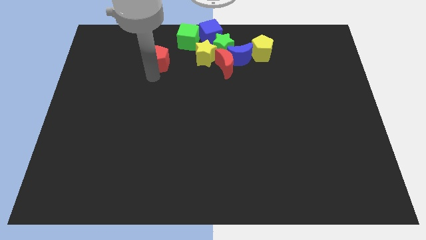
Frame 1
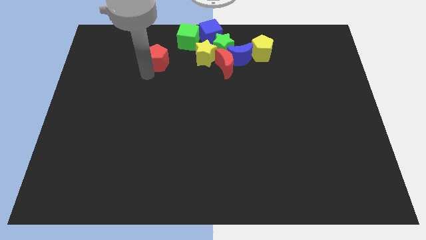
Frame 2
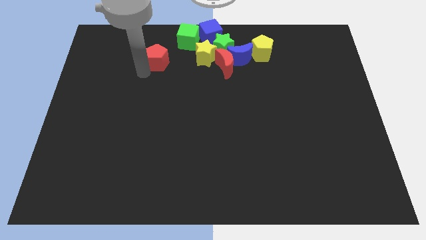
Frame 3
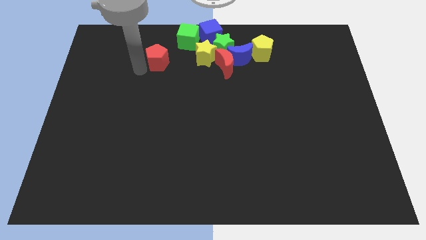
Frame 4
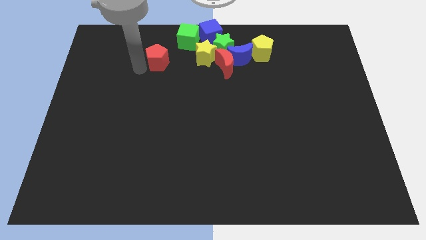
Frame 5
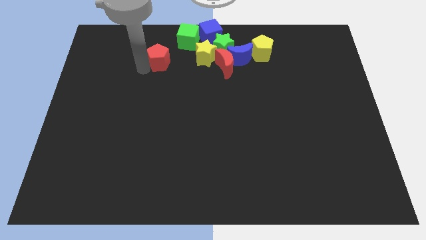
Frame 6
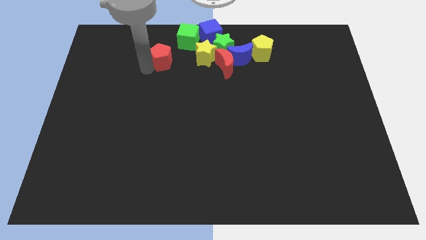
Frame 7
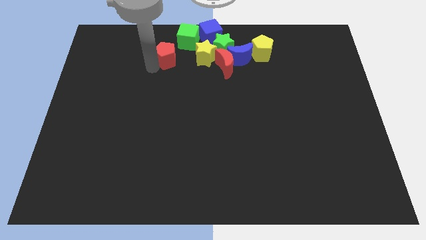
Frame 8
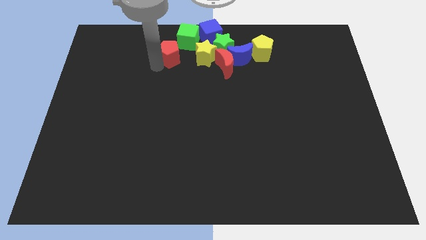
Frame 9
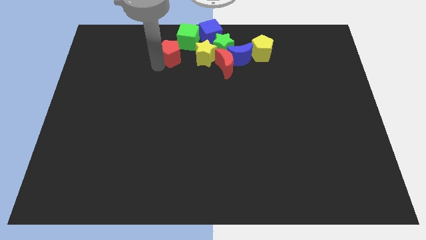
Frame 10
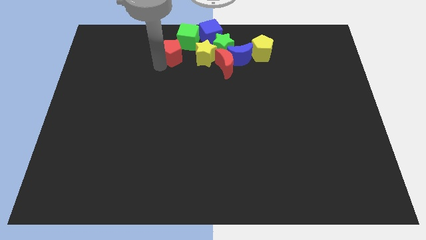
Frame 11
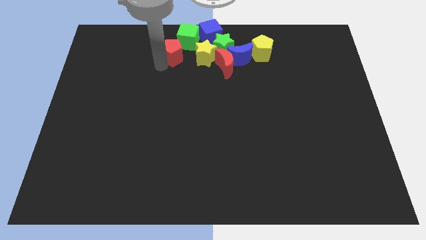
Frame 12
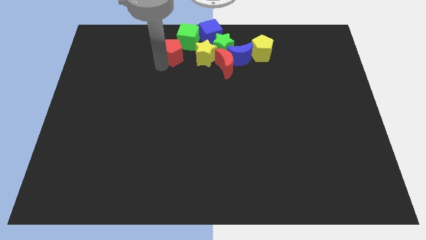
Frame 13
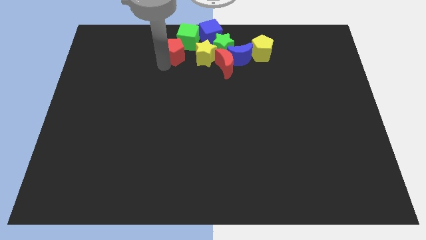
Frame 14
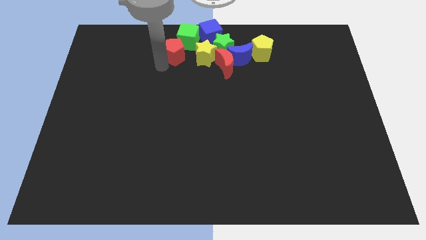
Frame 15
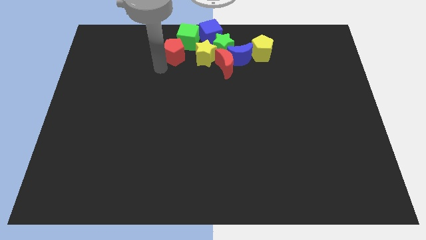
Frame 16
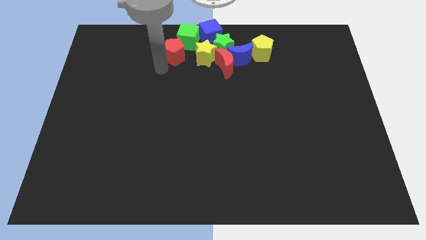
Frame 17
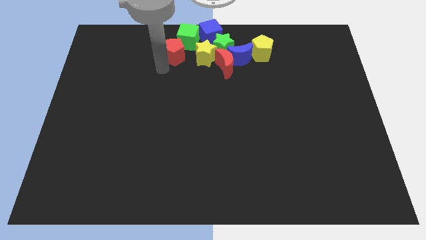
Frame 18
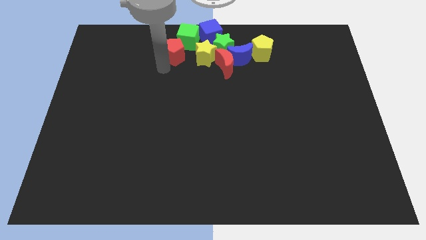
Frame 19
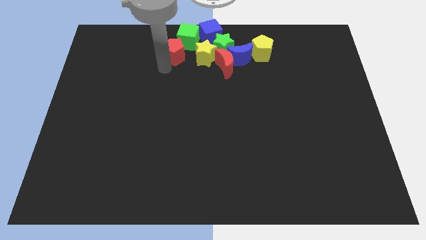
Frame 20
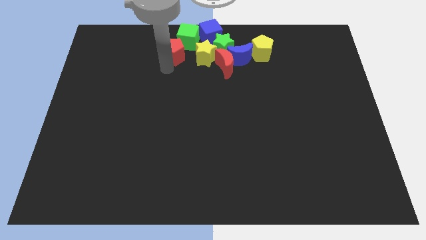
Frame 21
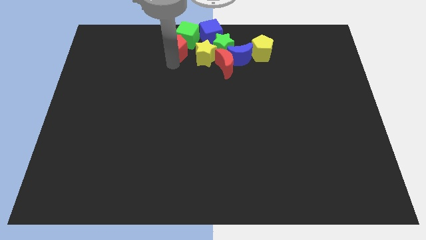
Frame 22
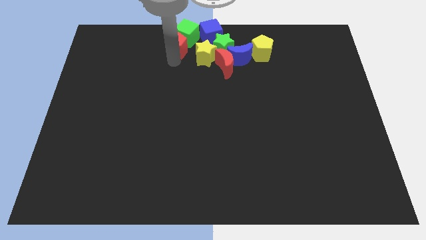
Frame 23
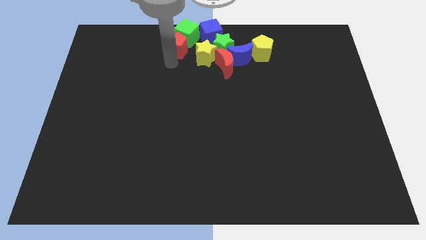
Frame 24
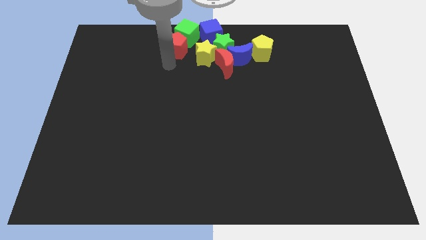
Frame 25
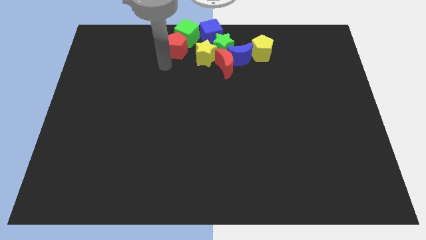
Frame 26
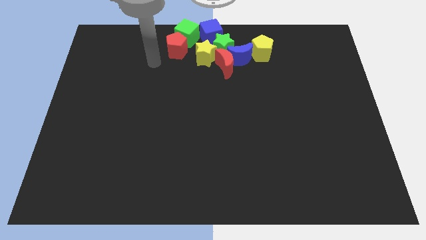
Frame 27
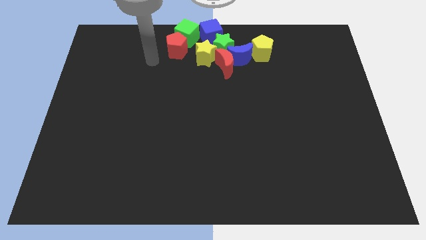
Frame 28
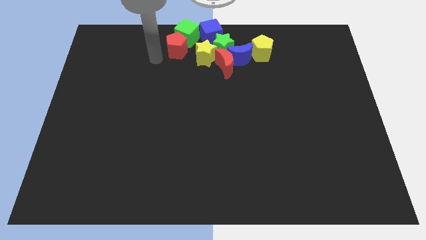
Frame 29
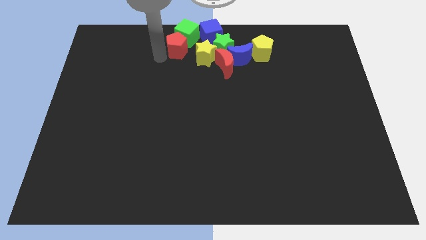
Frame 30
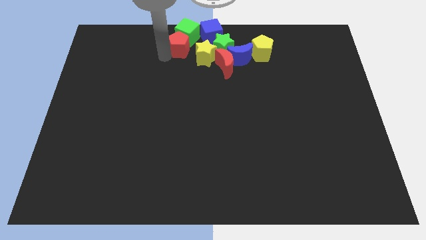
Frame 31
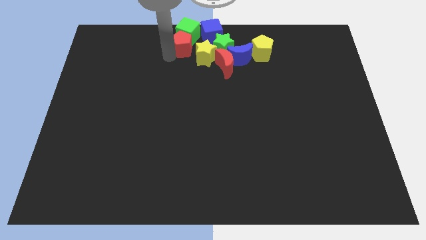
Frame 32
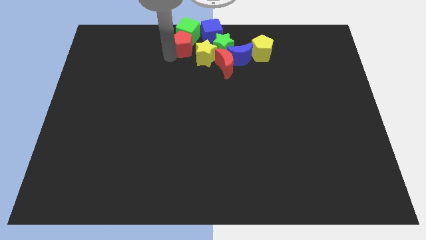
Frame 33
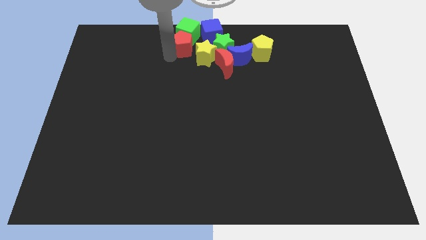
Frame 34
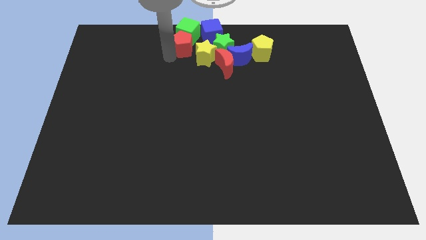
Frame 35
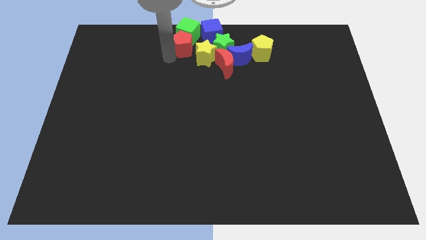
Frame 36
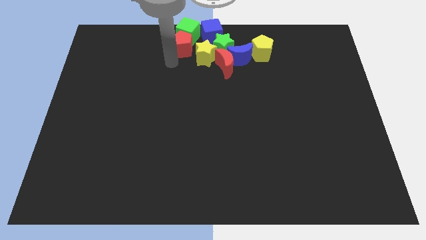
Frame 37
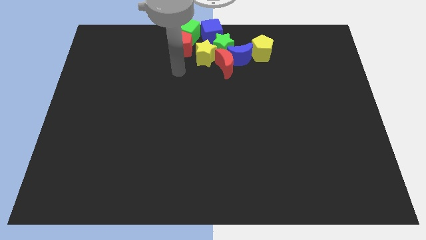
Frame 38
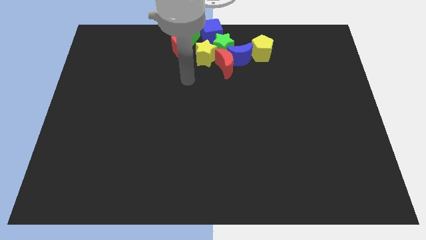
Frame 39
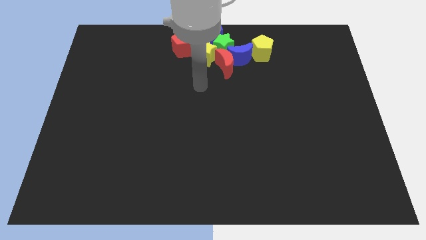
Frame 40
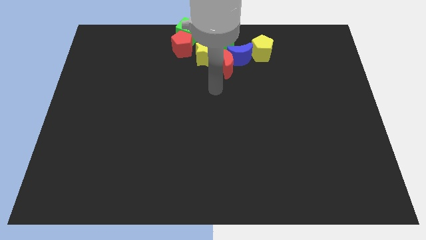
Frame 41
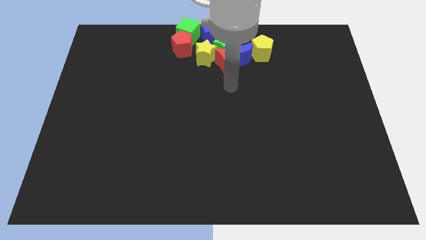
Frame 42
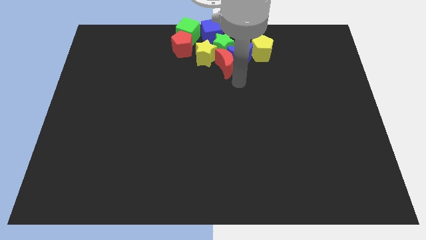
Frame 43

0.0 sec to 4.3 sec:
move red pentagon into the green cube

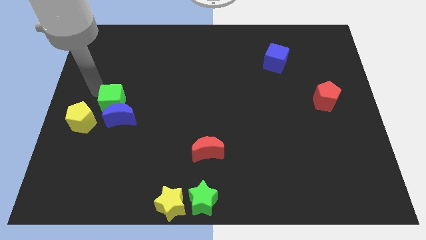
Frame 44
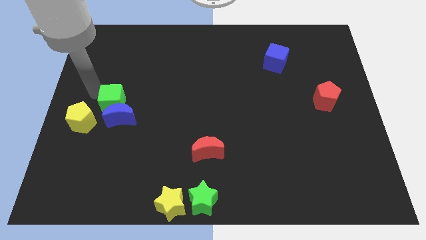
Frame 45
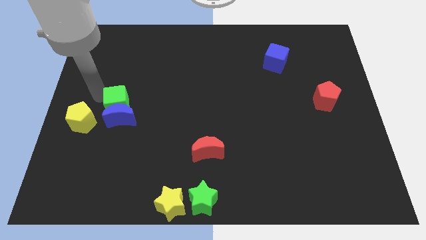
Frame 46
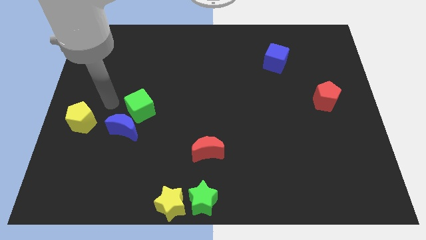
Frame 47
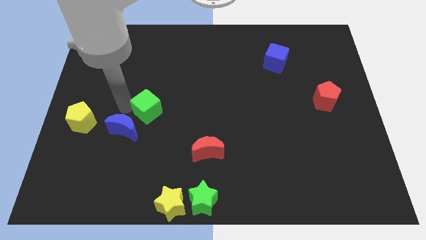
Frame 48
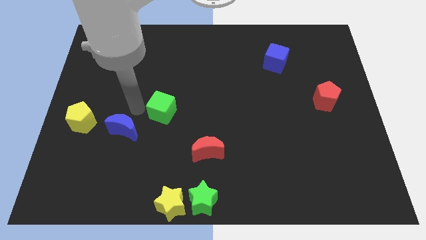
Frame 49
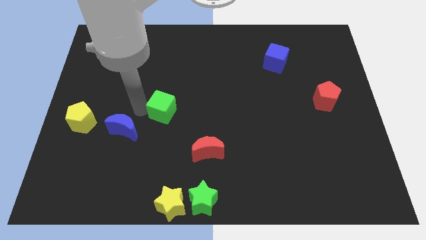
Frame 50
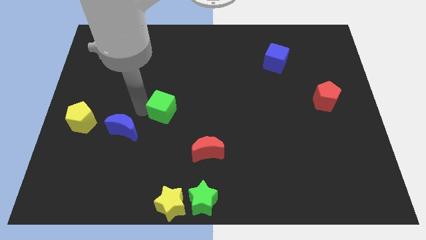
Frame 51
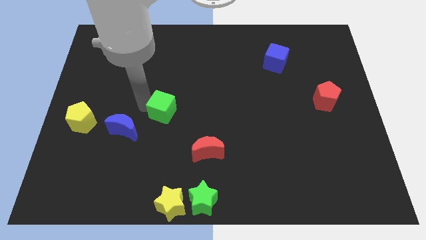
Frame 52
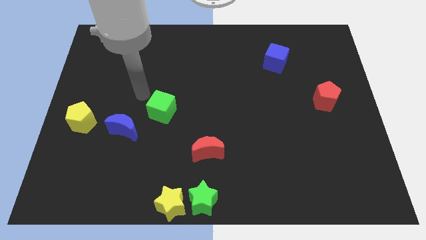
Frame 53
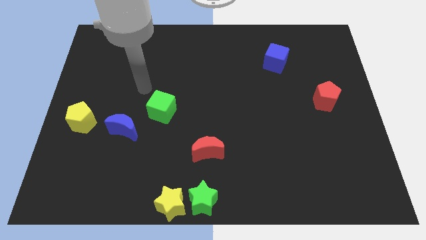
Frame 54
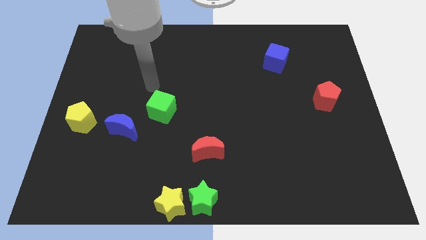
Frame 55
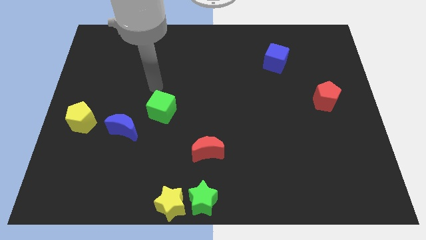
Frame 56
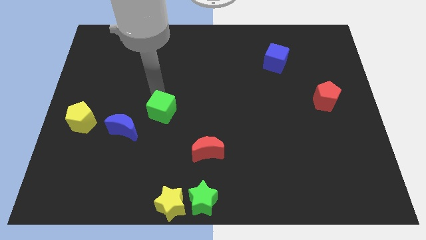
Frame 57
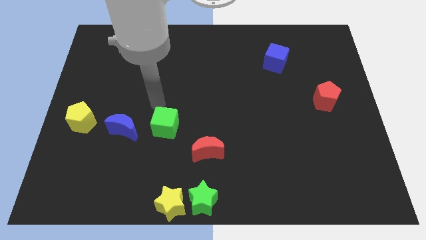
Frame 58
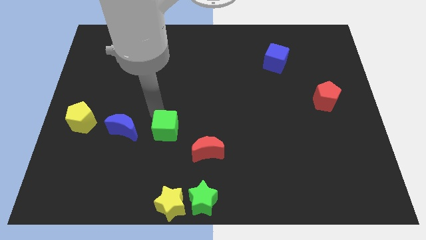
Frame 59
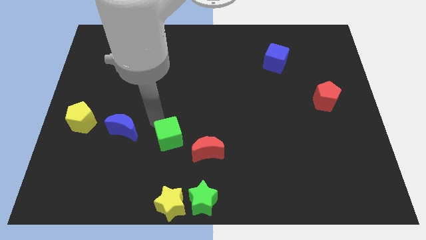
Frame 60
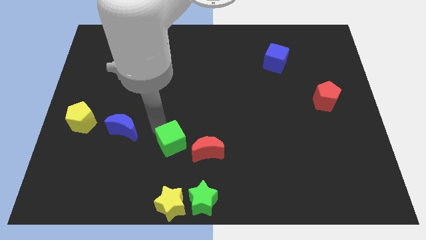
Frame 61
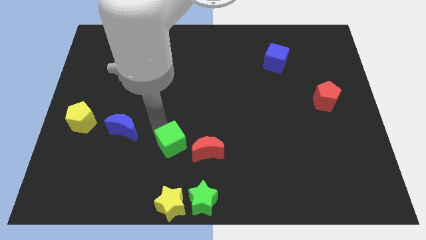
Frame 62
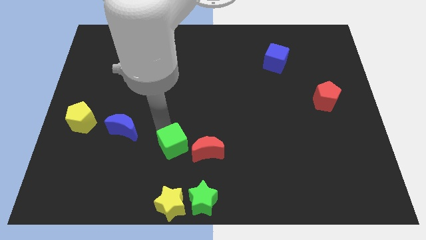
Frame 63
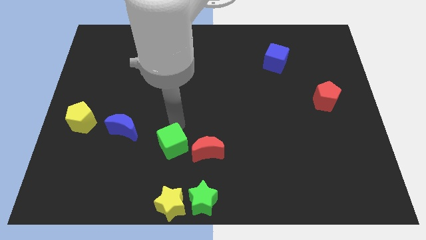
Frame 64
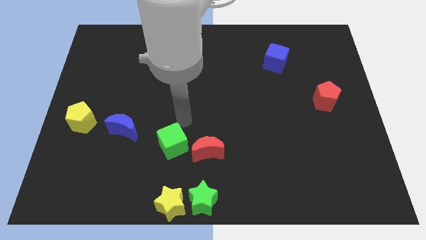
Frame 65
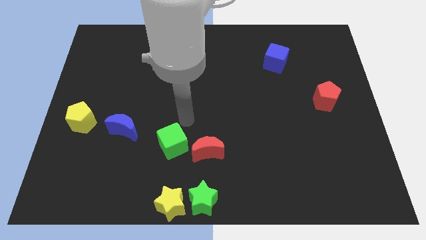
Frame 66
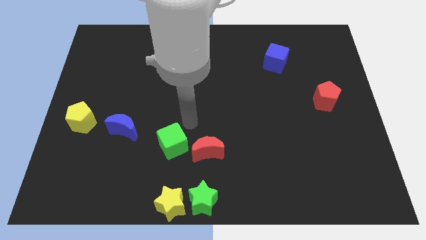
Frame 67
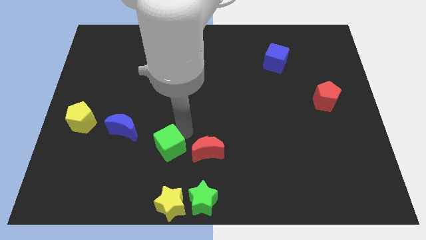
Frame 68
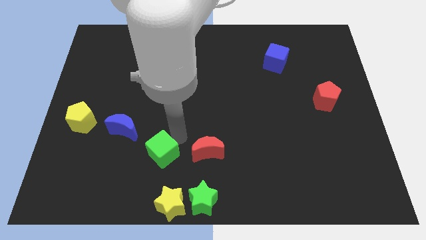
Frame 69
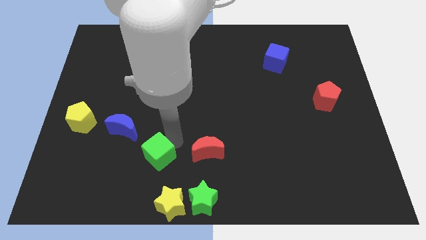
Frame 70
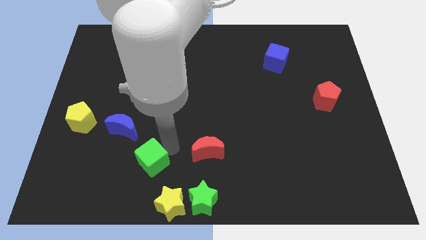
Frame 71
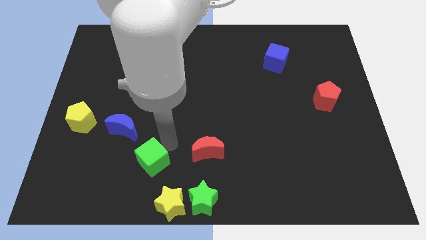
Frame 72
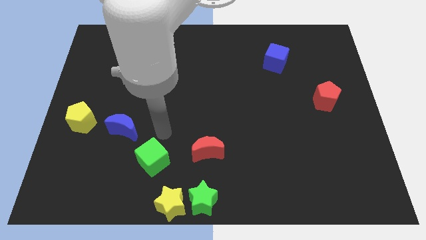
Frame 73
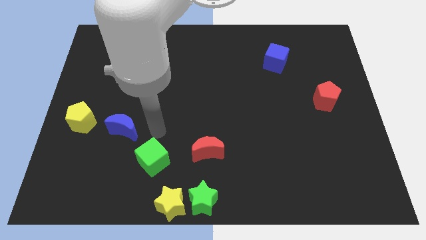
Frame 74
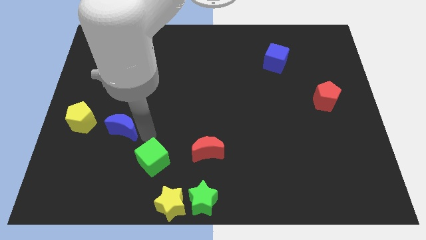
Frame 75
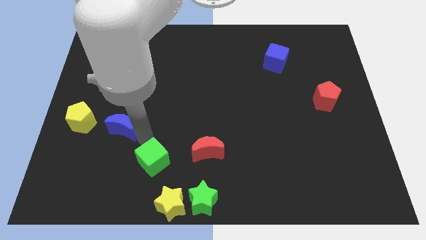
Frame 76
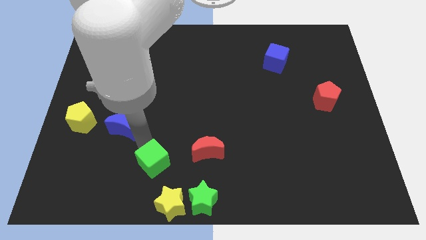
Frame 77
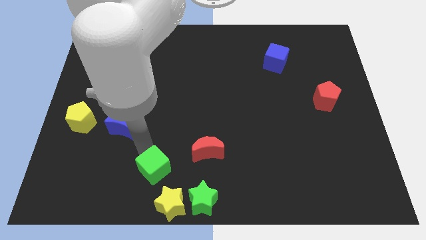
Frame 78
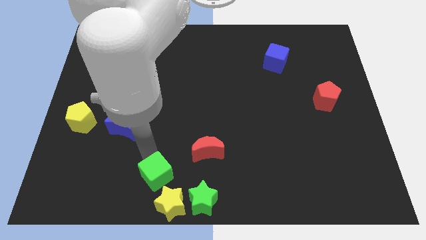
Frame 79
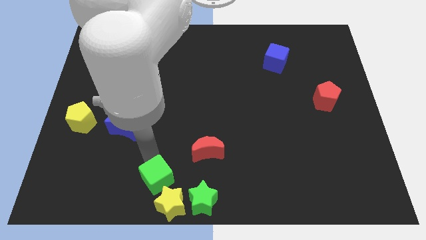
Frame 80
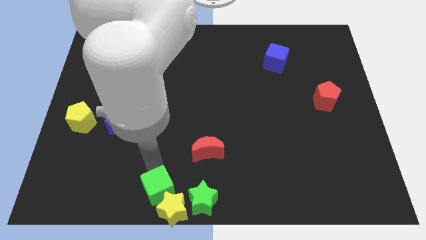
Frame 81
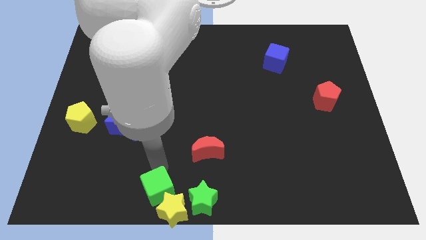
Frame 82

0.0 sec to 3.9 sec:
move the green cube into a yellow star

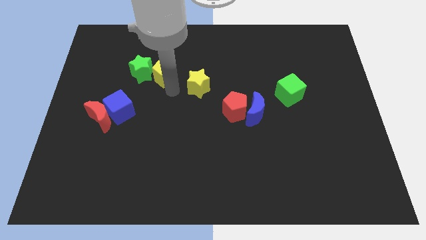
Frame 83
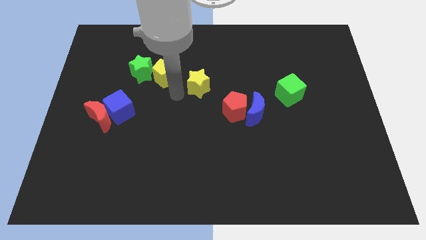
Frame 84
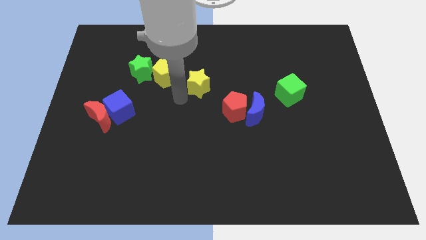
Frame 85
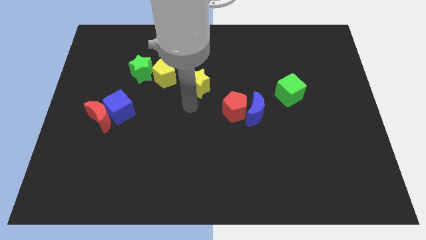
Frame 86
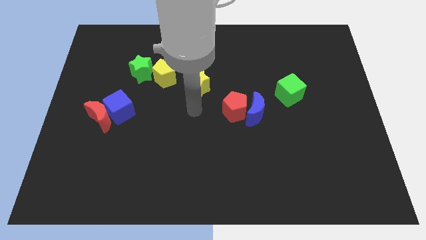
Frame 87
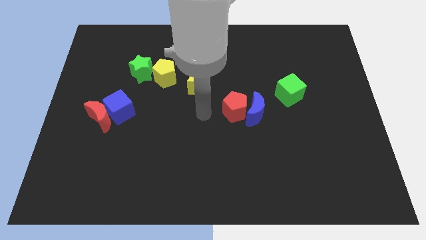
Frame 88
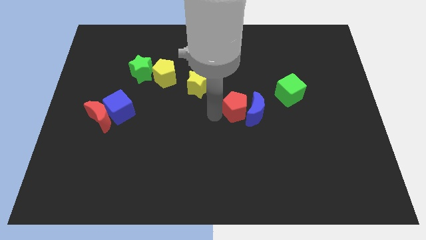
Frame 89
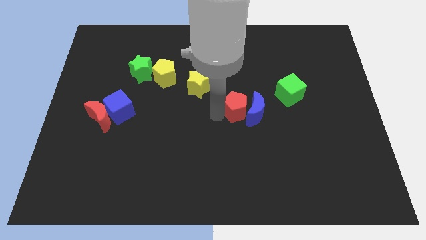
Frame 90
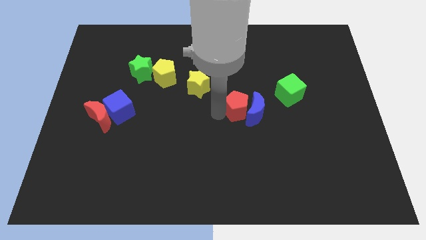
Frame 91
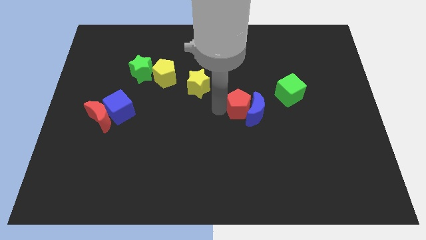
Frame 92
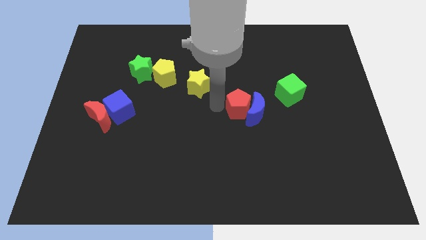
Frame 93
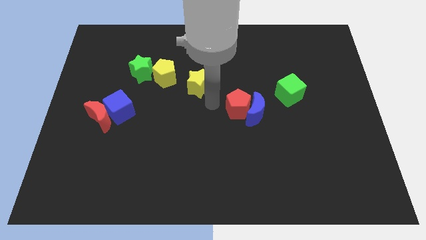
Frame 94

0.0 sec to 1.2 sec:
move the red pentagon close to blue crescent
